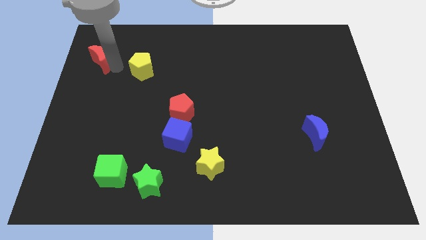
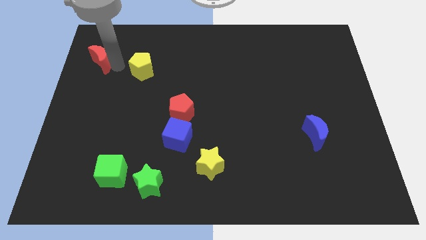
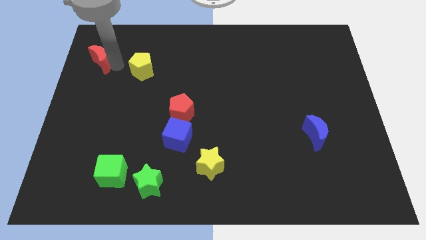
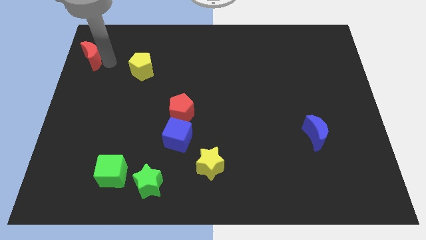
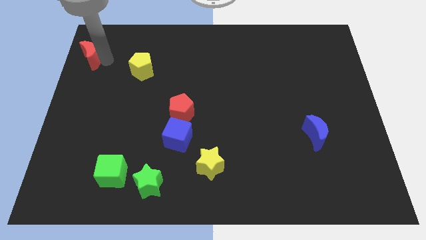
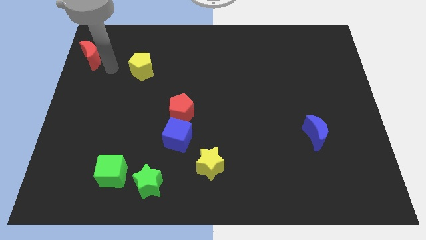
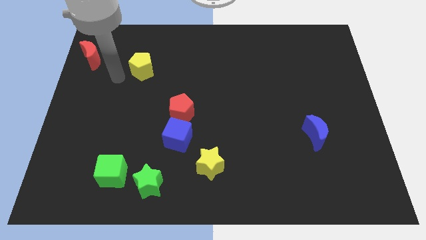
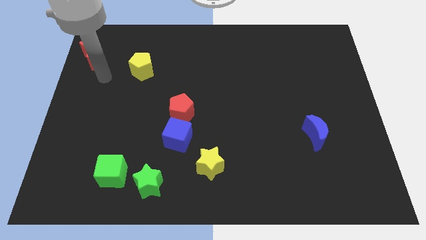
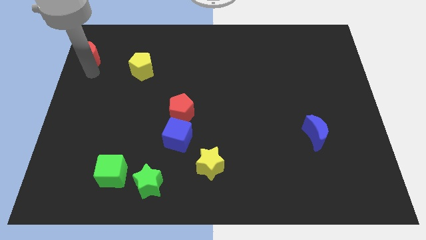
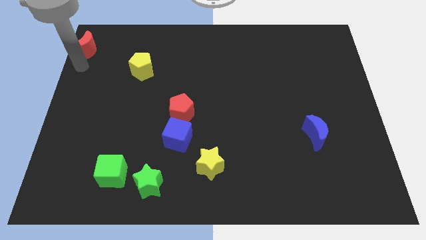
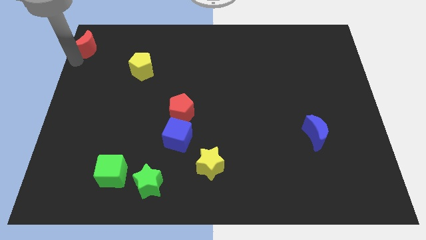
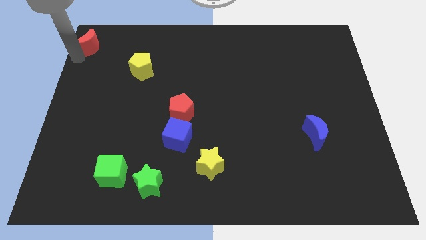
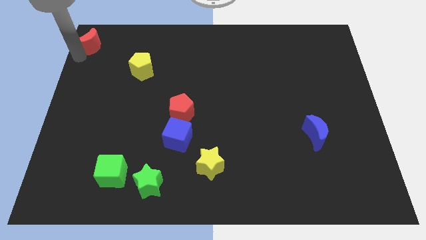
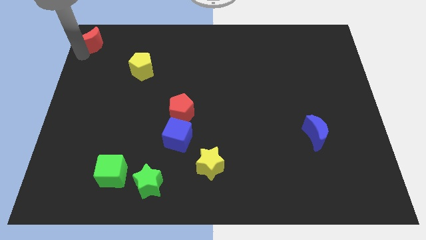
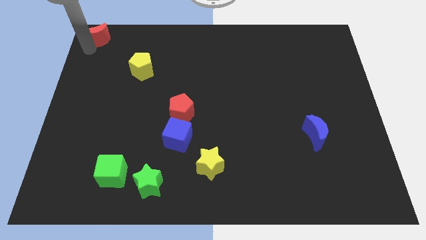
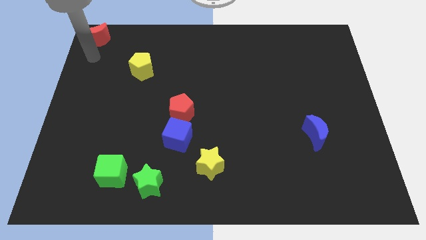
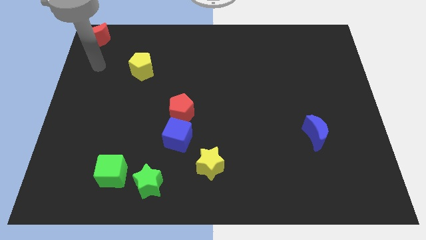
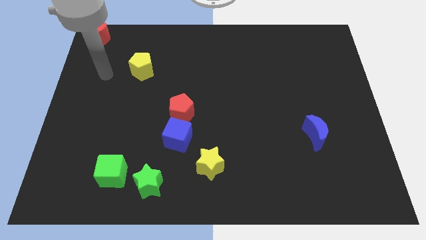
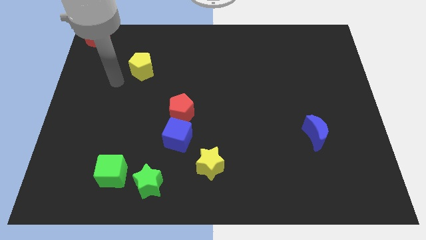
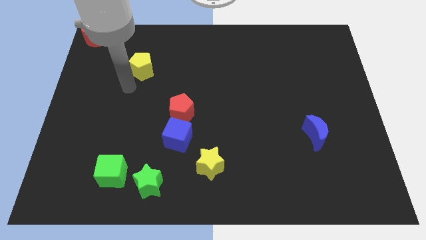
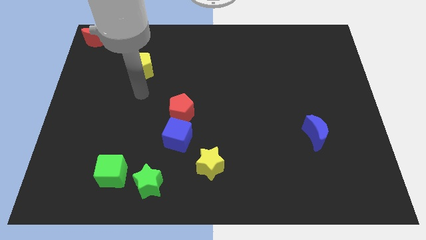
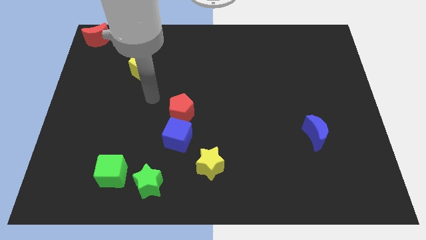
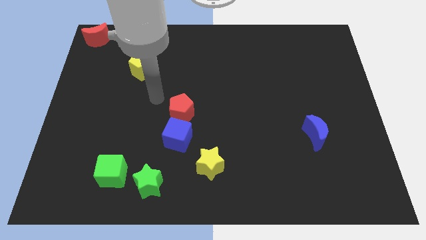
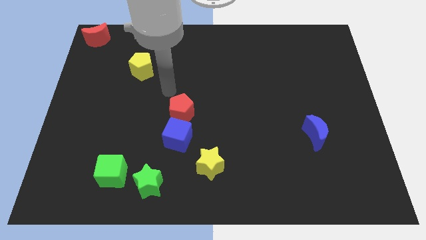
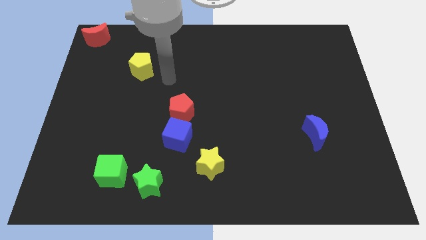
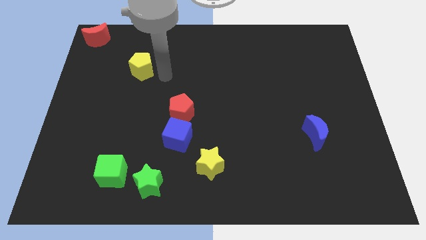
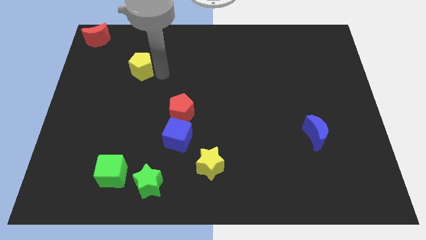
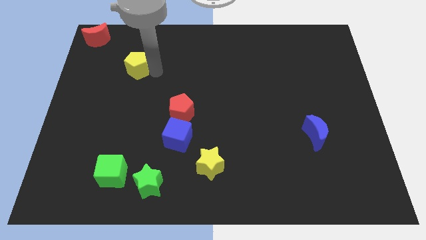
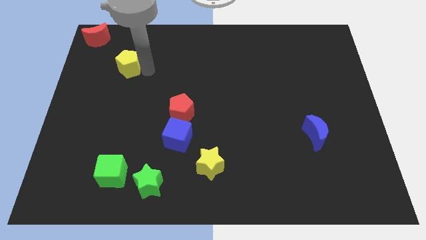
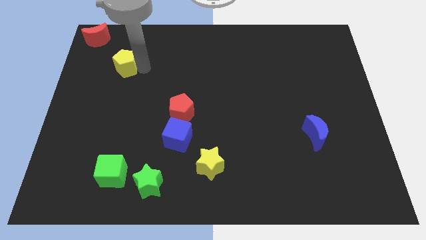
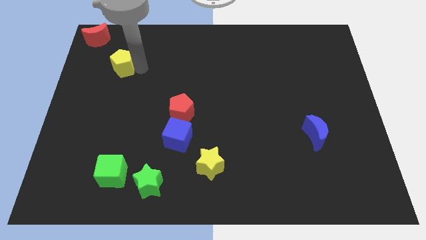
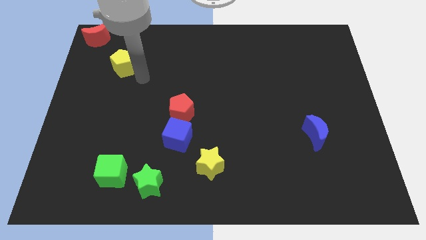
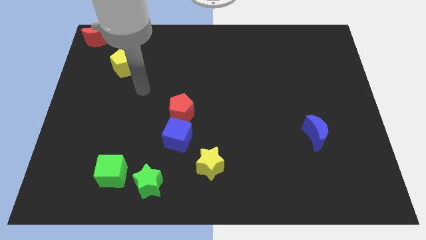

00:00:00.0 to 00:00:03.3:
make a diagonal line with the red moon yellow pentagon and red pentagon

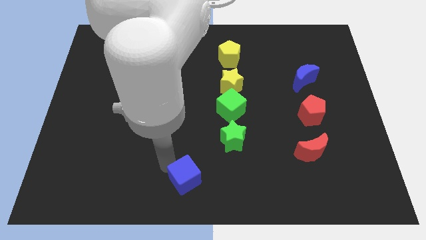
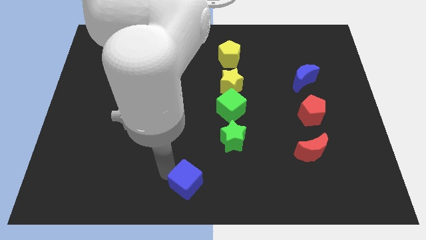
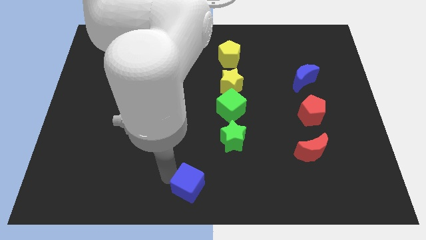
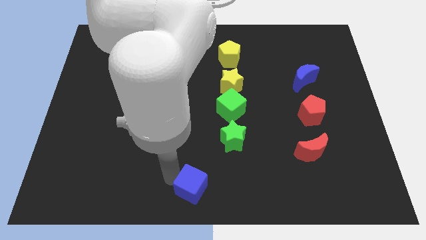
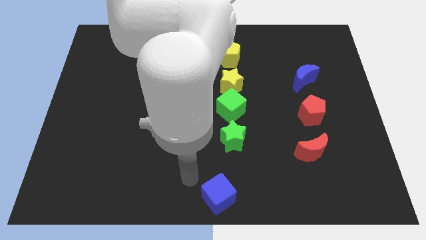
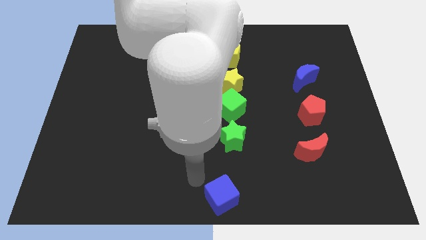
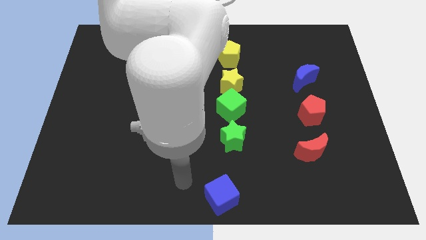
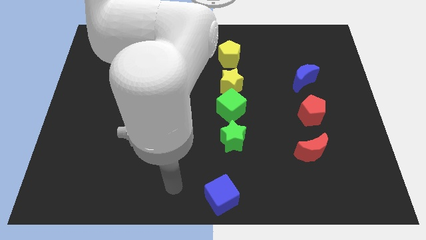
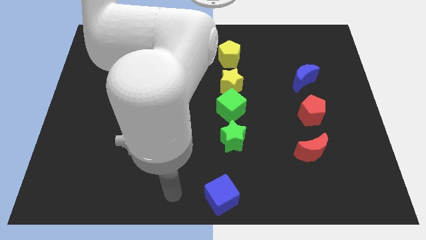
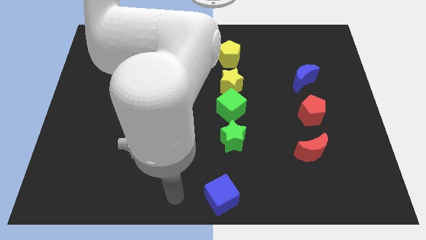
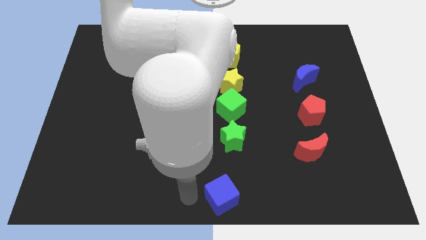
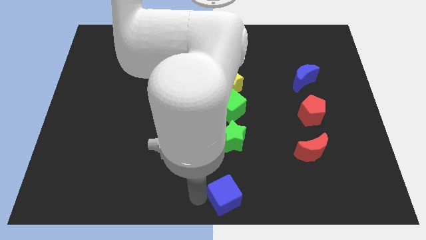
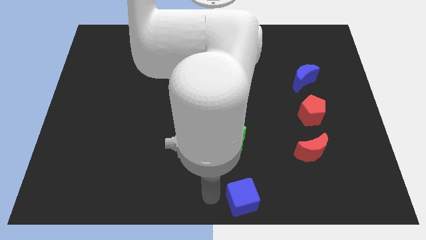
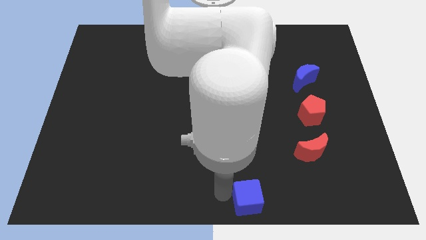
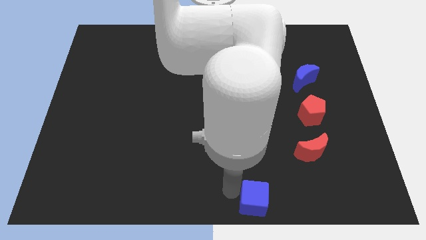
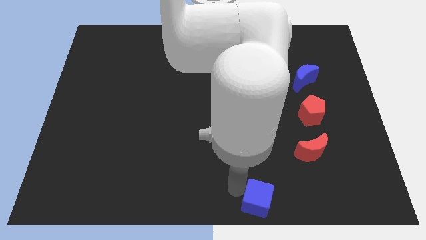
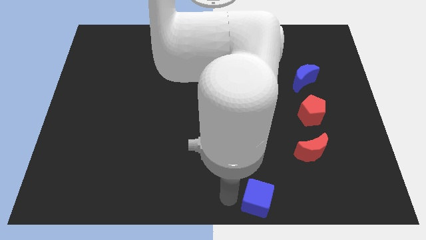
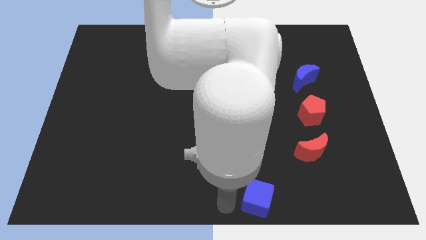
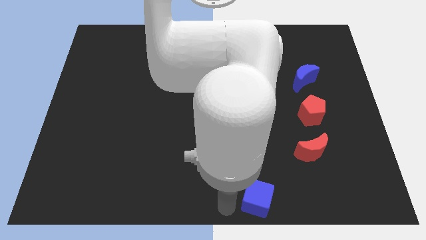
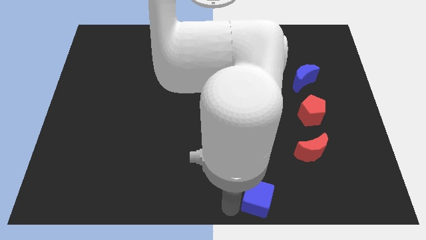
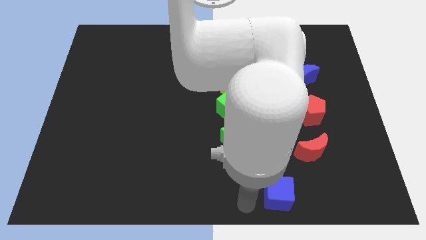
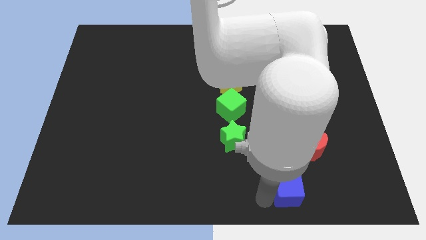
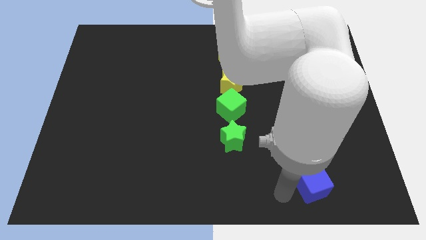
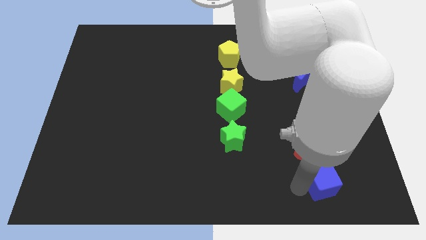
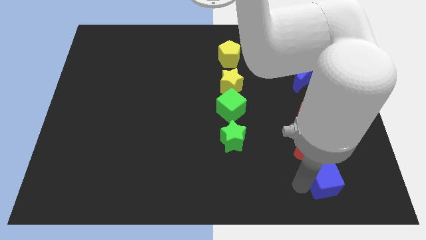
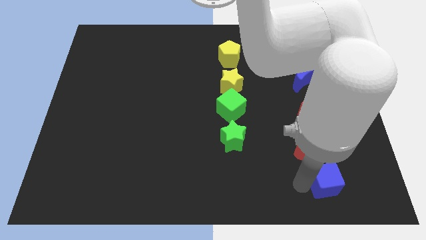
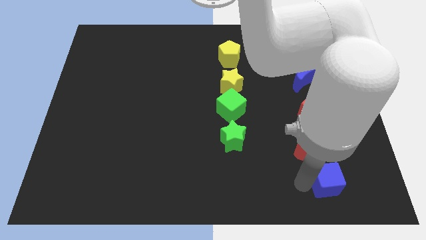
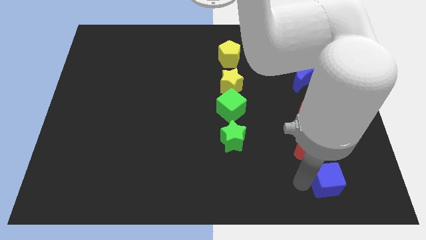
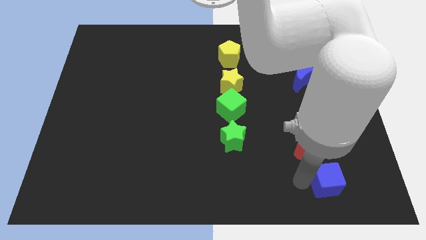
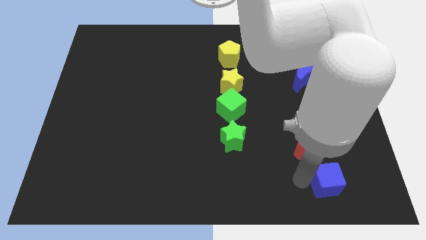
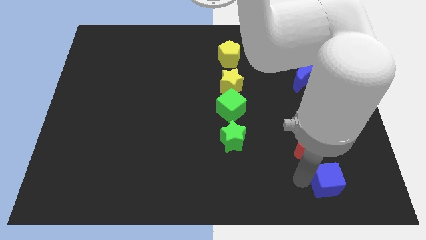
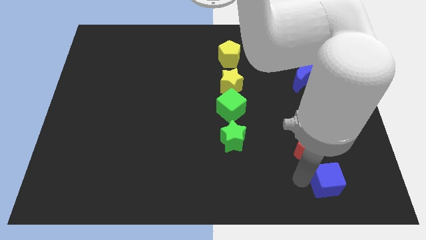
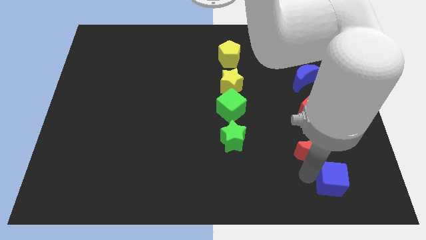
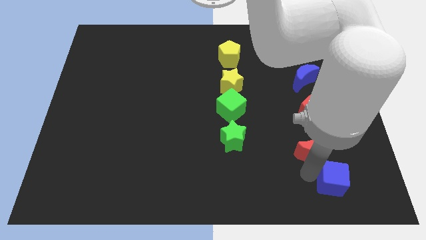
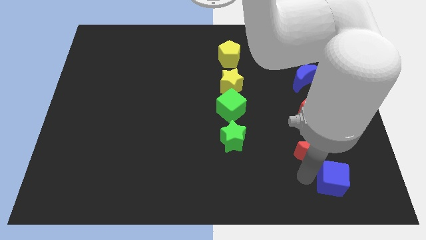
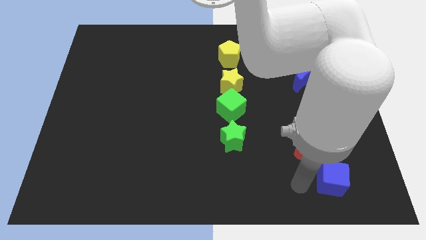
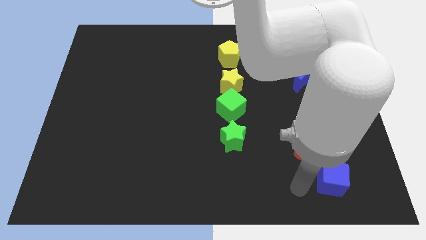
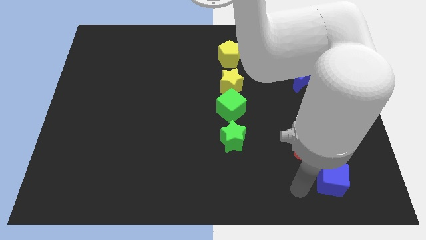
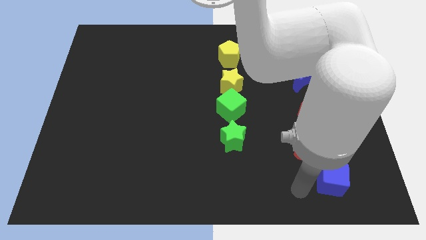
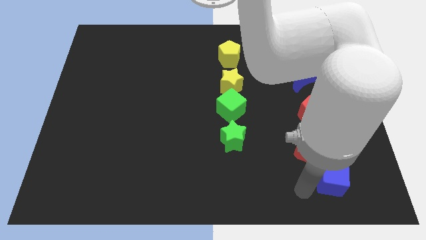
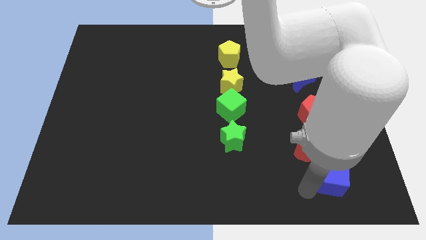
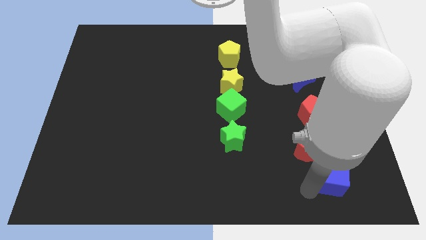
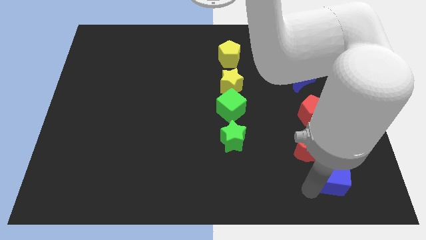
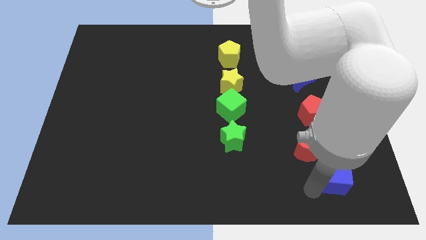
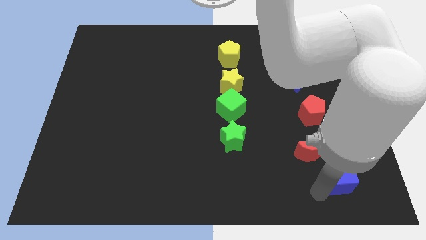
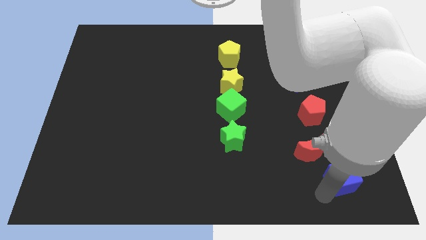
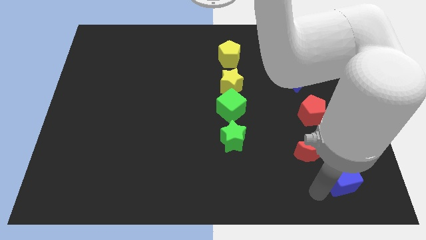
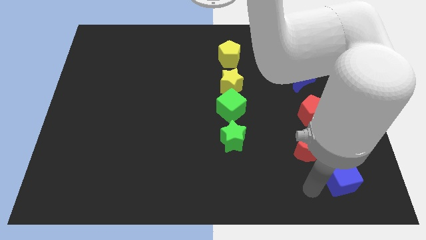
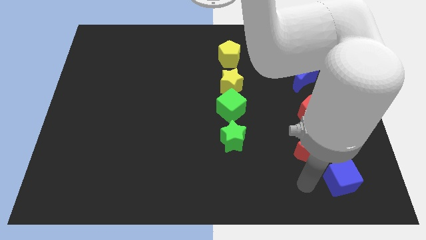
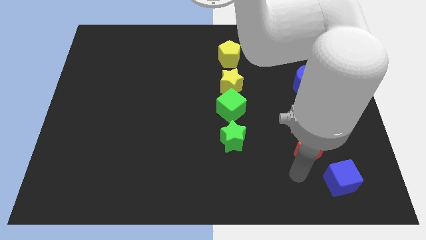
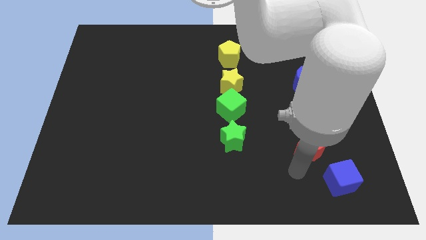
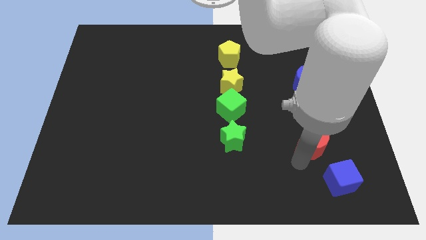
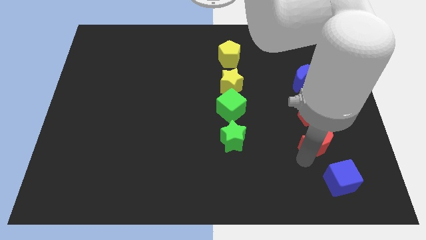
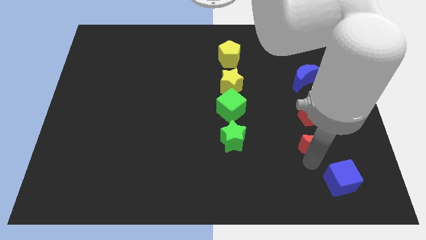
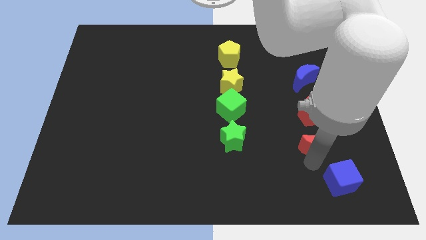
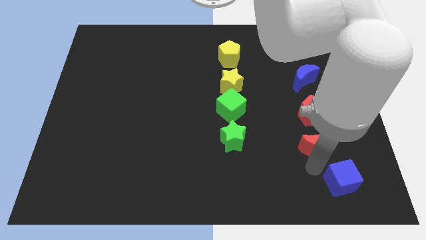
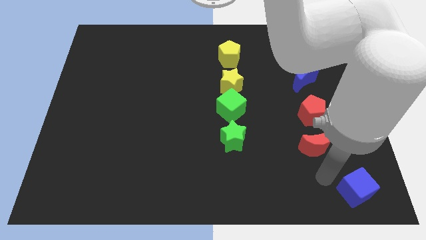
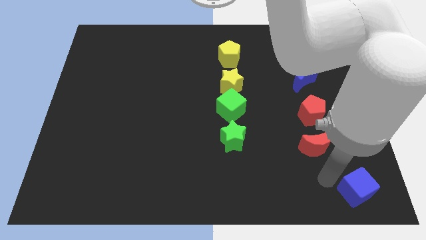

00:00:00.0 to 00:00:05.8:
push the blue cube to the bottom right of the board
